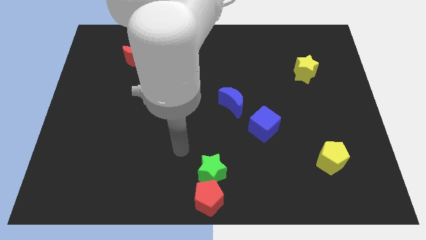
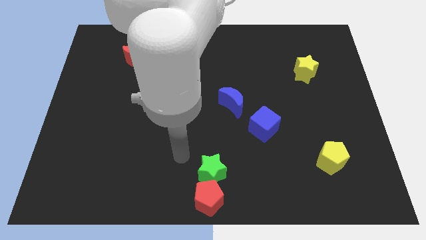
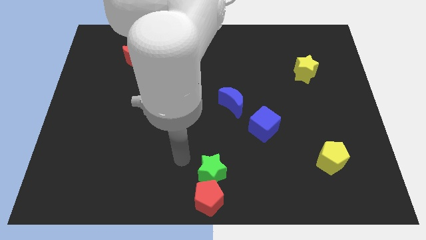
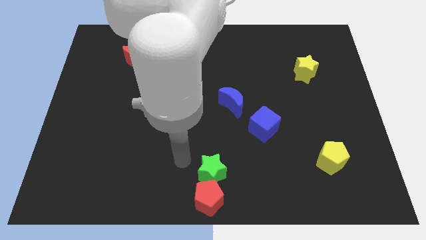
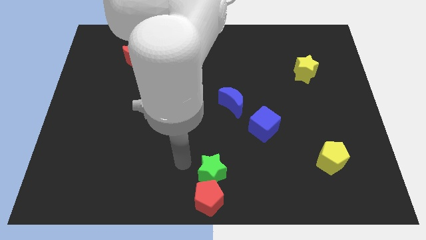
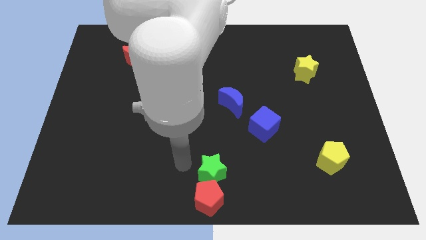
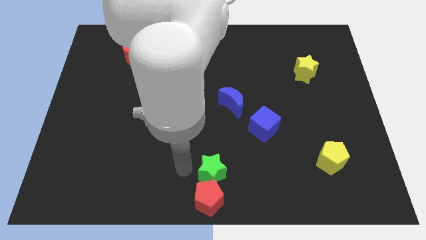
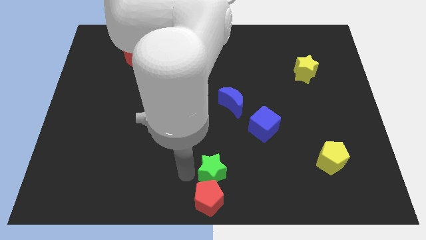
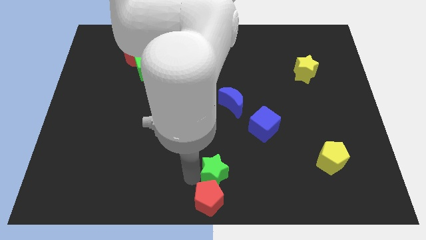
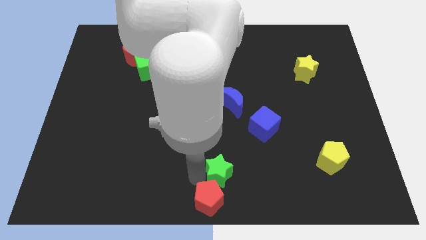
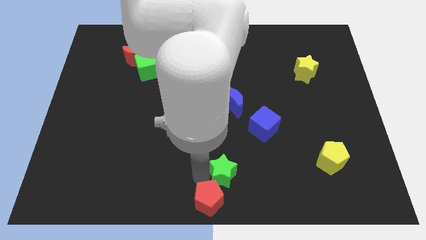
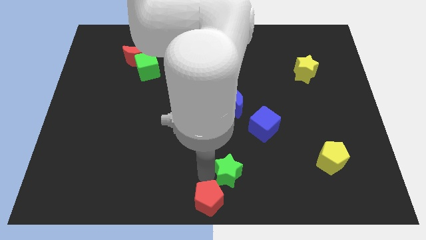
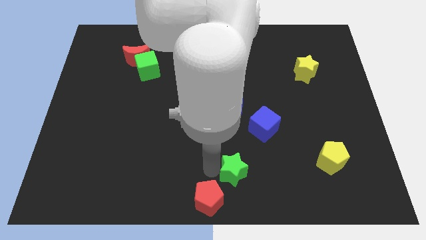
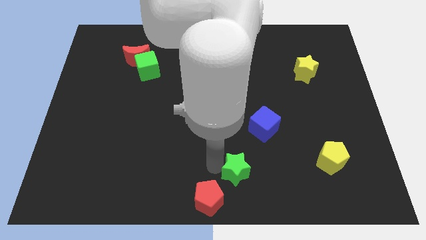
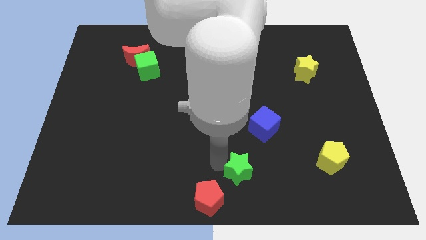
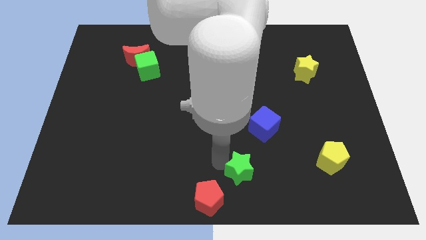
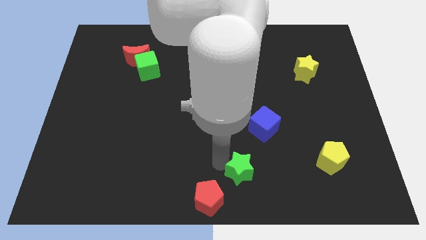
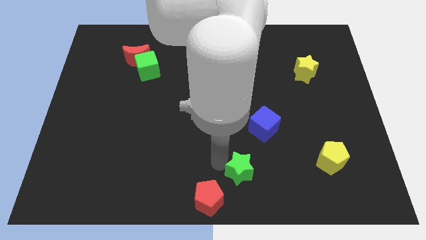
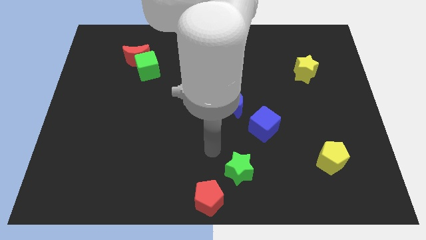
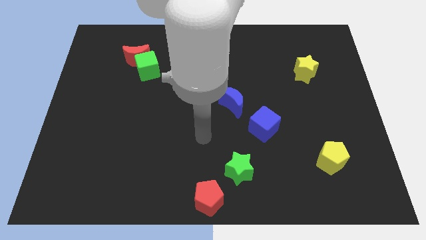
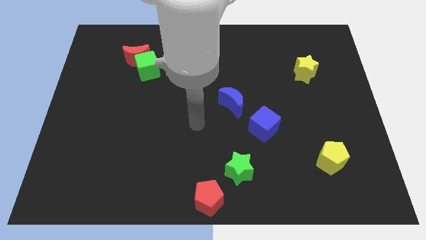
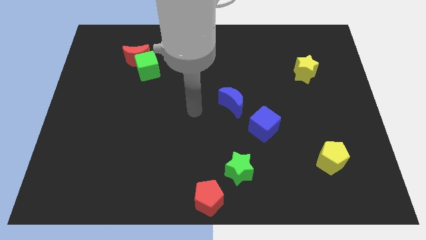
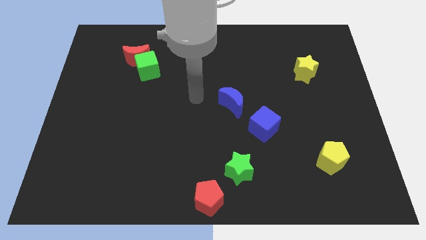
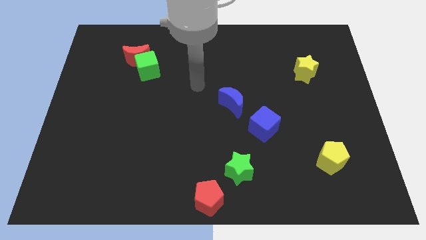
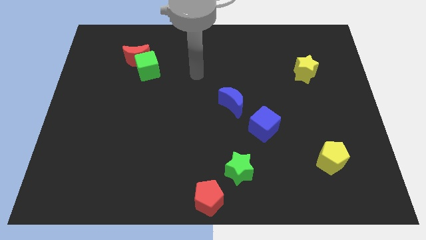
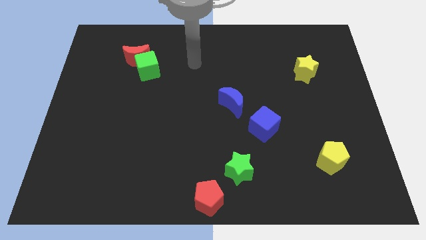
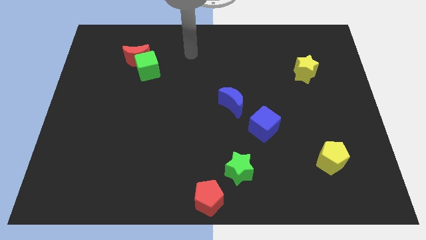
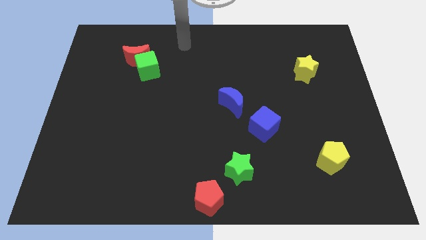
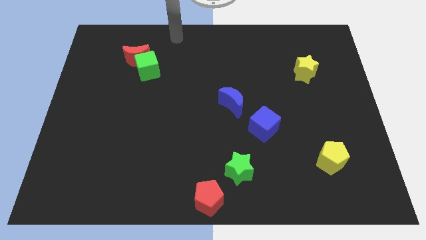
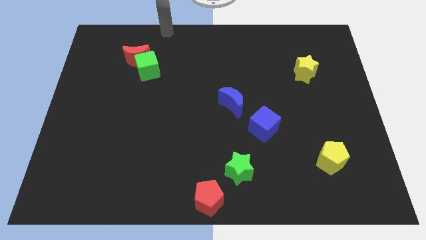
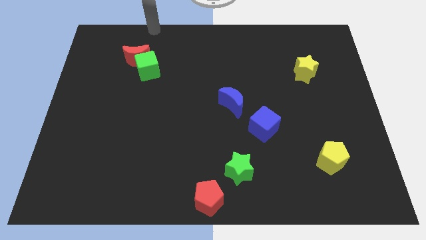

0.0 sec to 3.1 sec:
separate green star from red pentagon

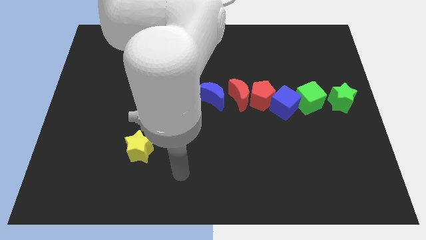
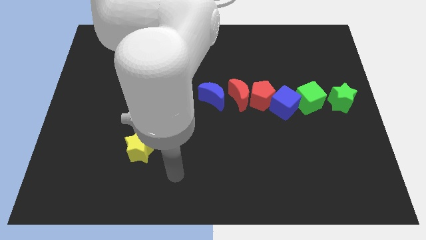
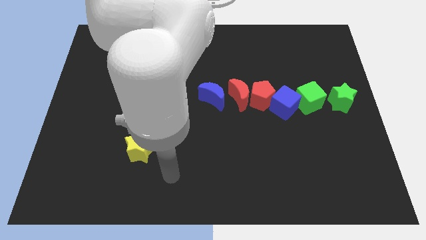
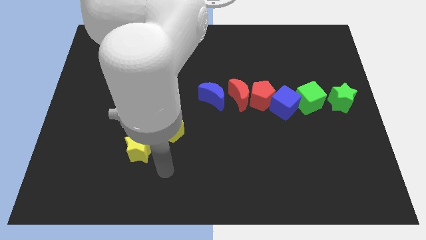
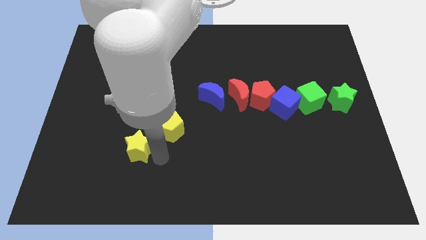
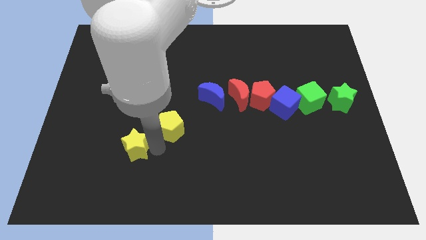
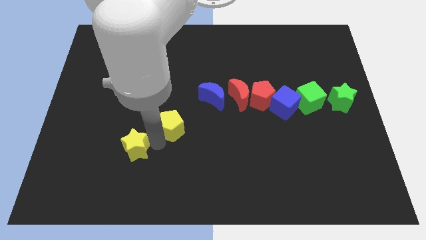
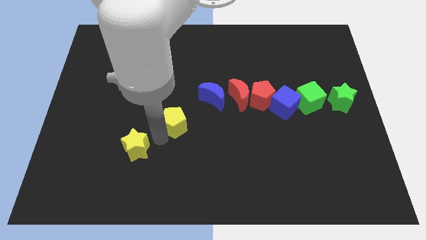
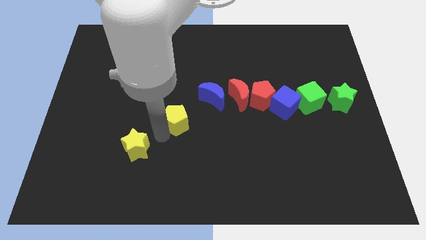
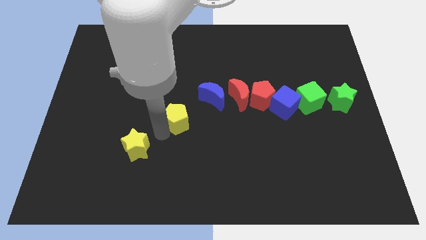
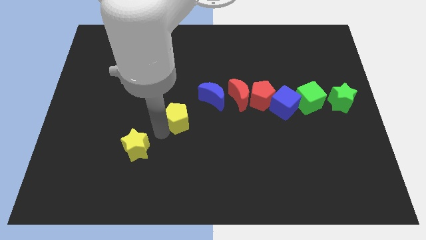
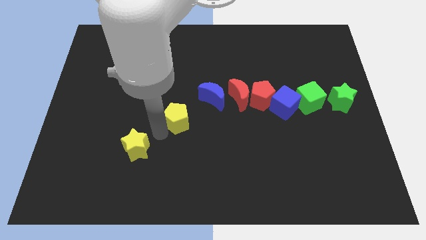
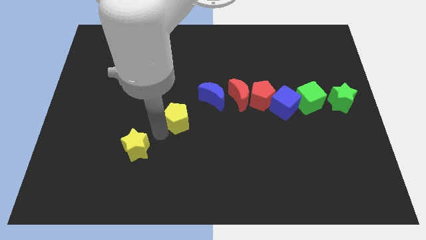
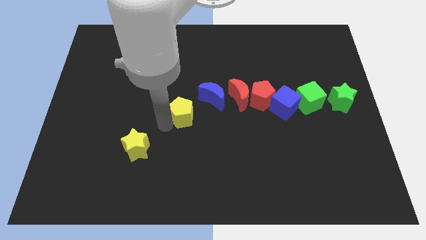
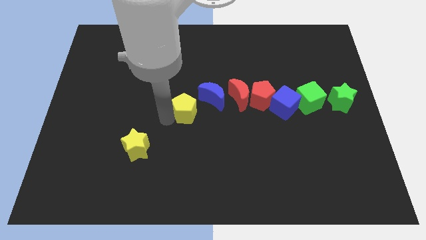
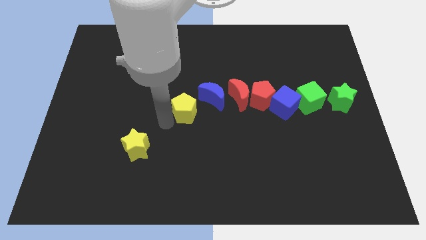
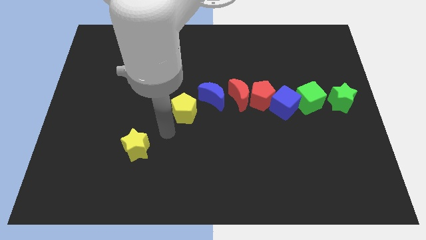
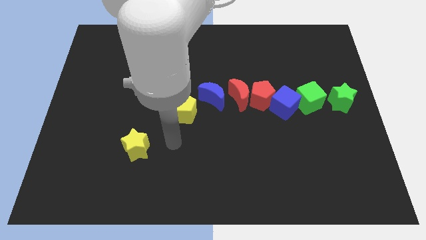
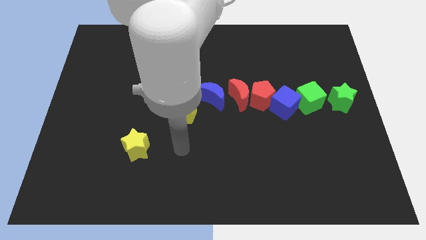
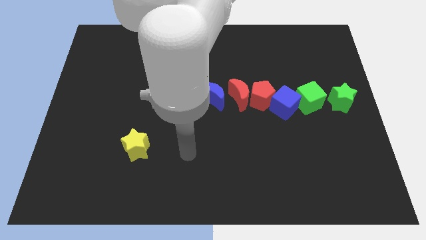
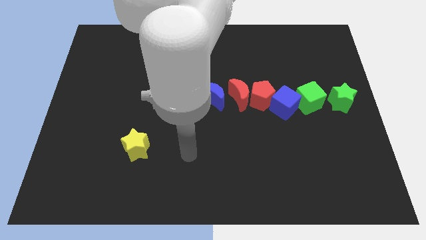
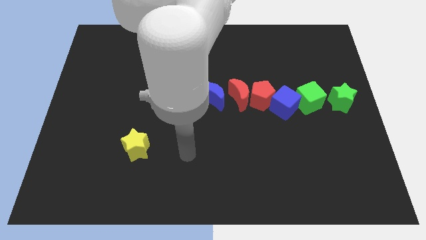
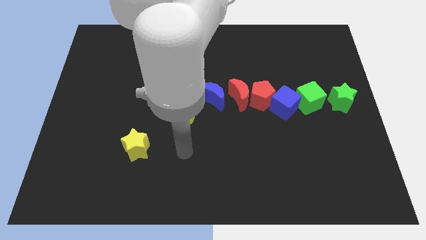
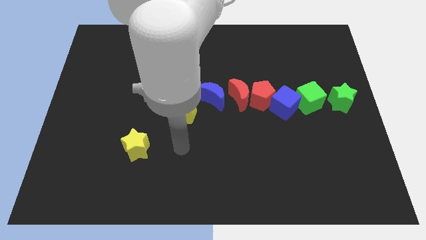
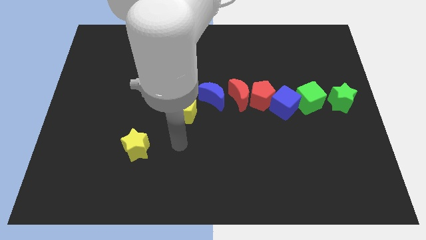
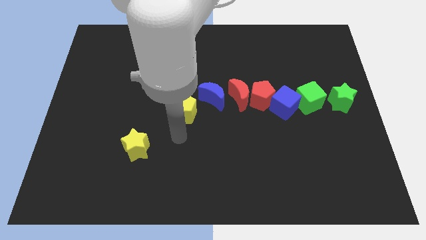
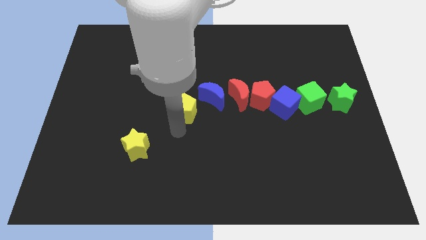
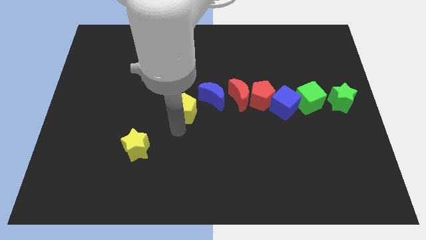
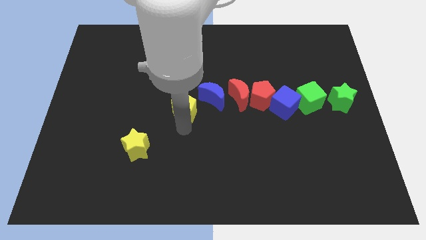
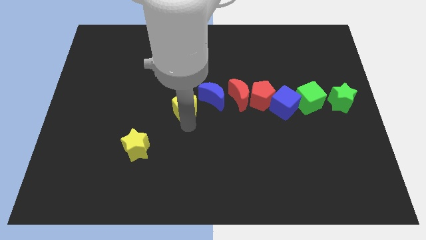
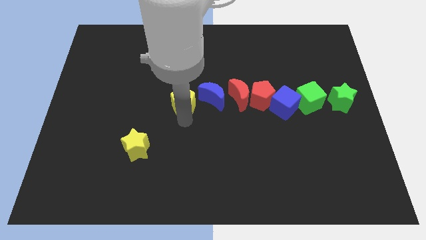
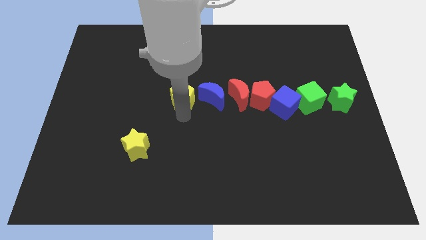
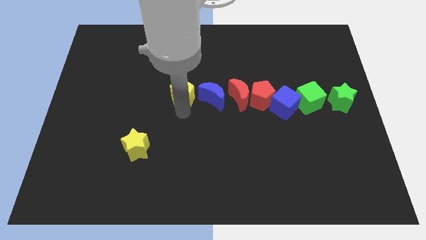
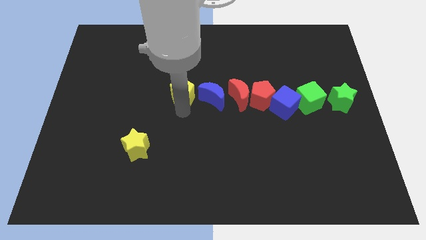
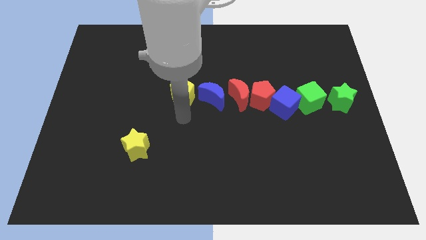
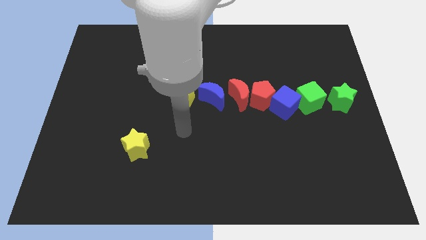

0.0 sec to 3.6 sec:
push the yellow pentagon to the left of the blue moon

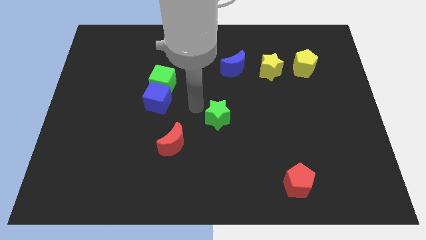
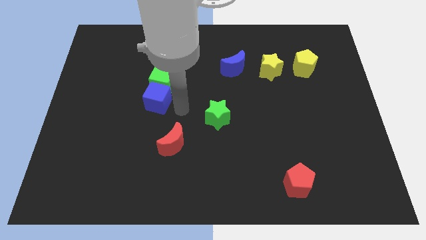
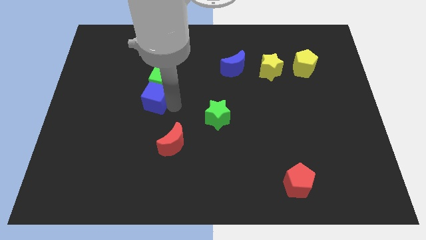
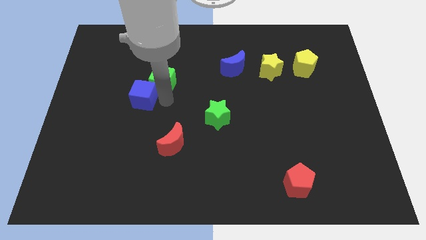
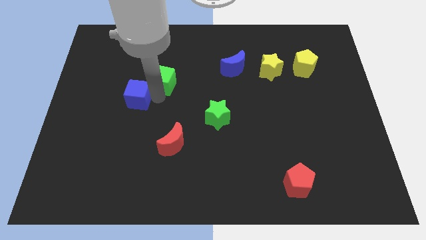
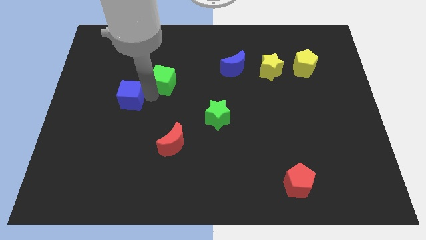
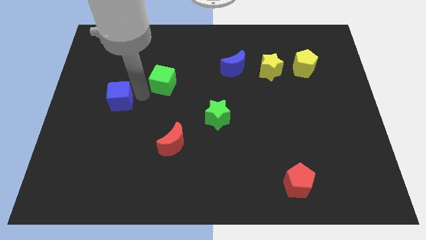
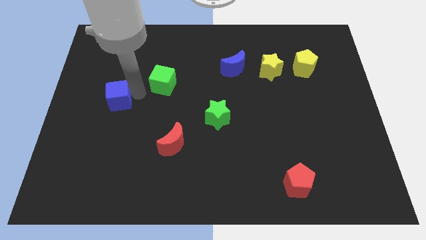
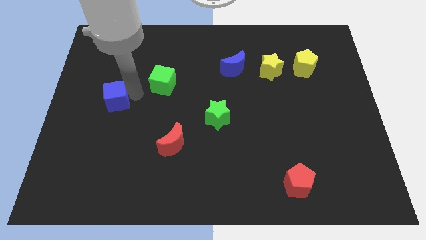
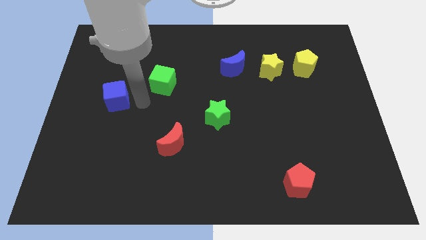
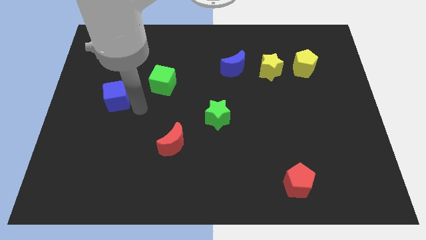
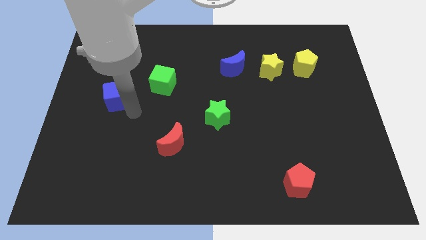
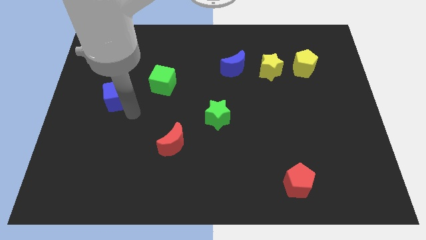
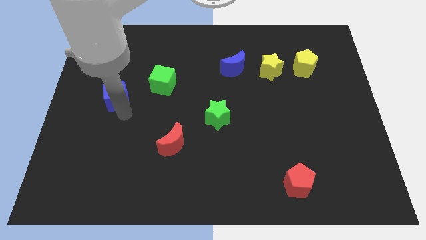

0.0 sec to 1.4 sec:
move the blue cube away from the green cube

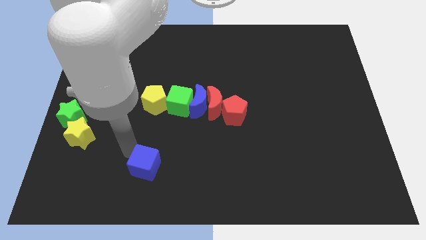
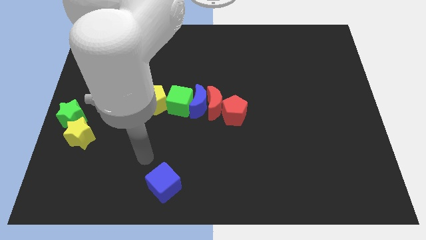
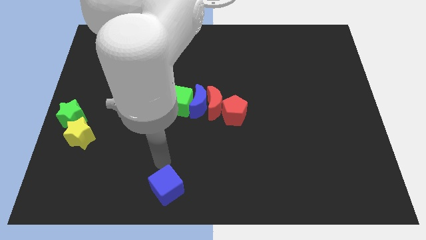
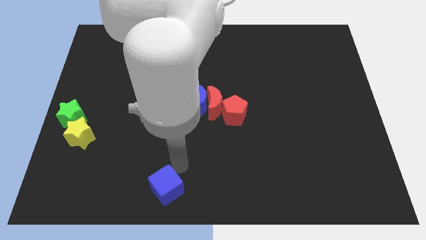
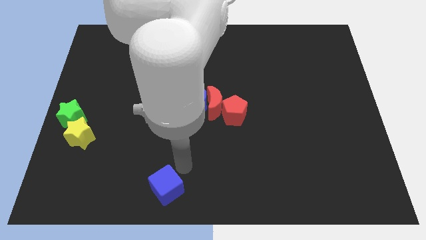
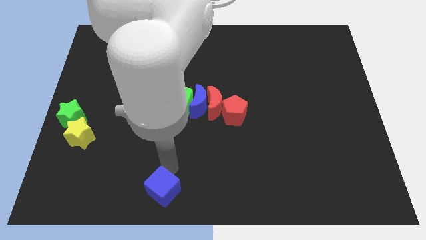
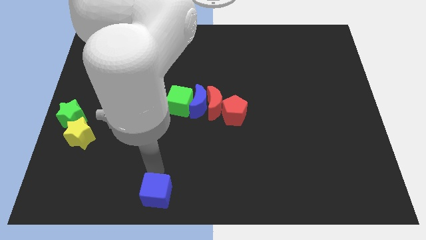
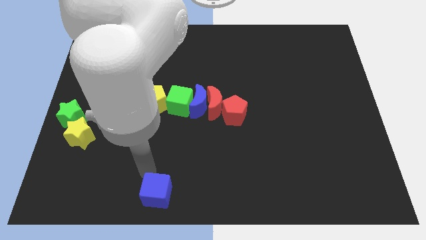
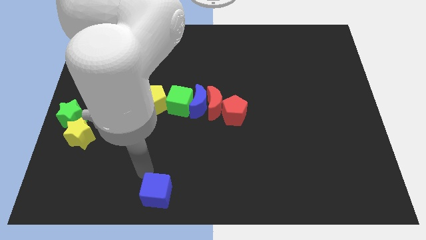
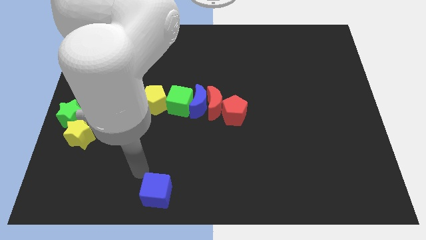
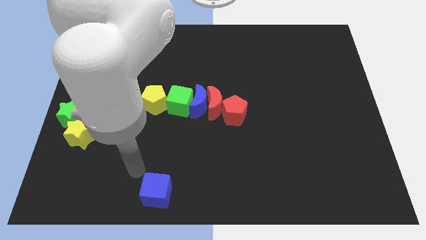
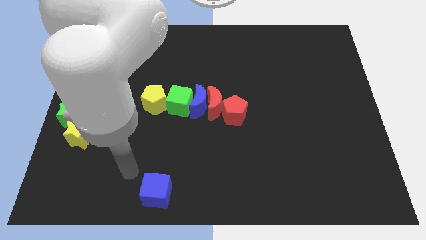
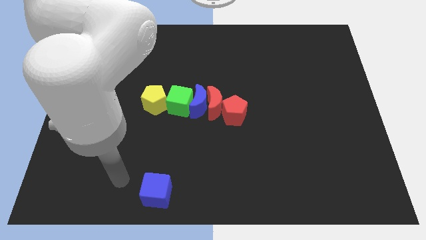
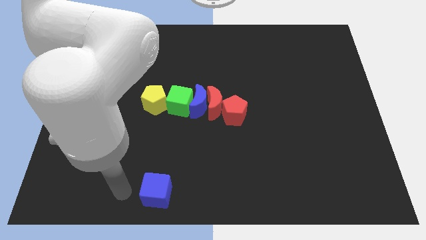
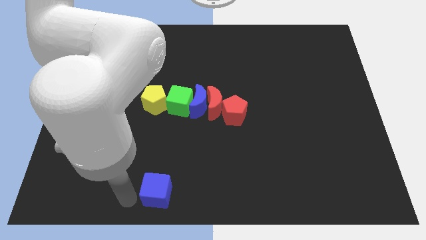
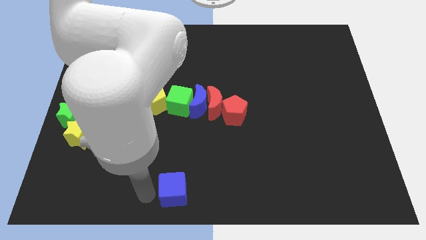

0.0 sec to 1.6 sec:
slide the blue cube to the bottom center
